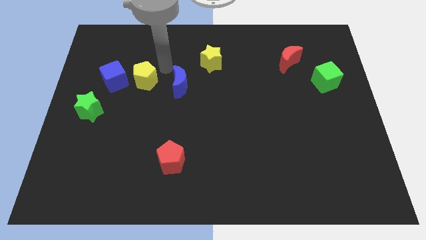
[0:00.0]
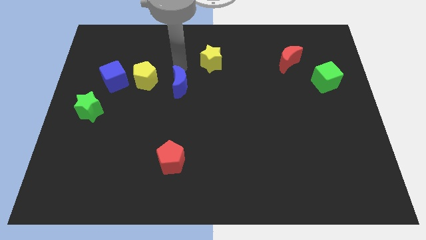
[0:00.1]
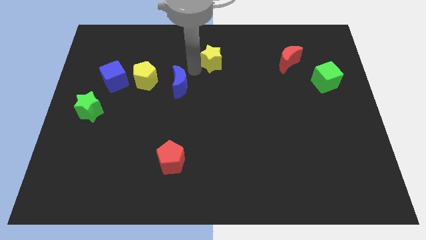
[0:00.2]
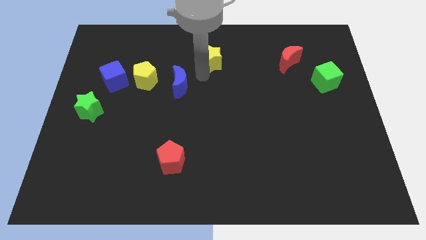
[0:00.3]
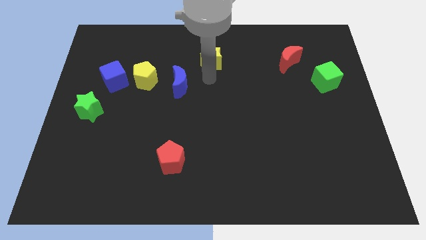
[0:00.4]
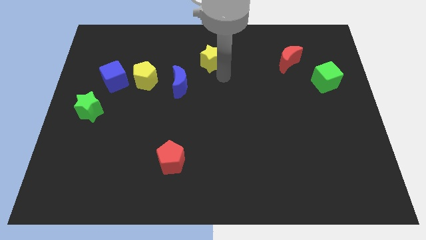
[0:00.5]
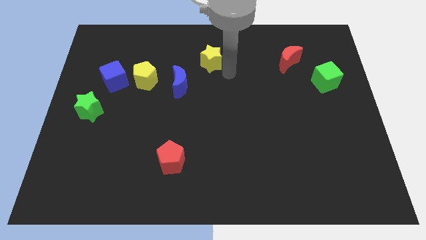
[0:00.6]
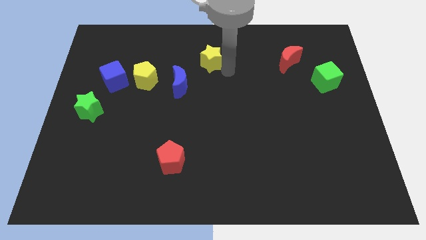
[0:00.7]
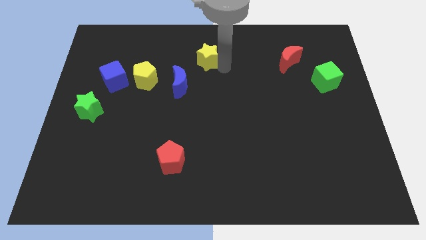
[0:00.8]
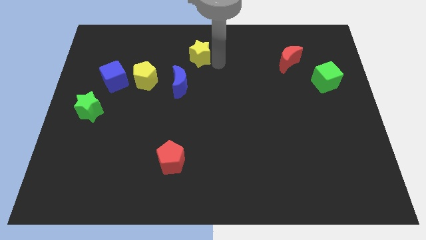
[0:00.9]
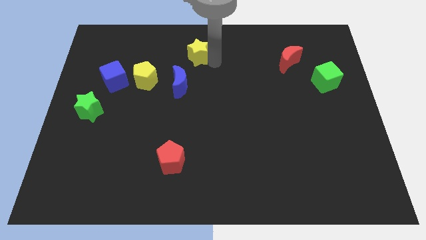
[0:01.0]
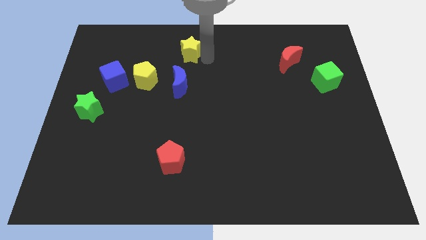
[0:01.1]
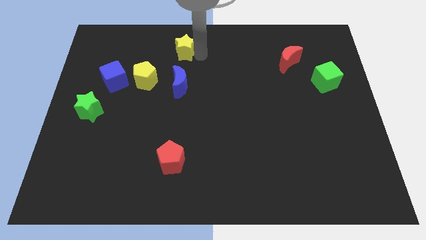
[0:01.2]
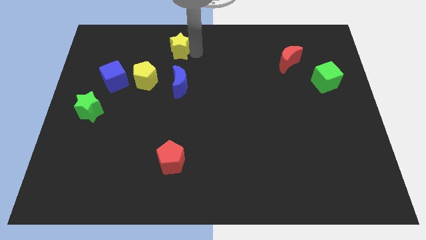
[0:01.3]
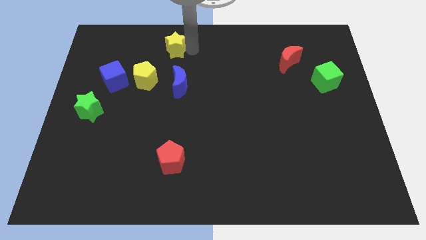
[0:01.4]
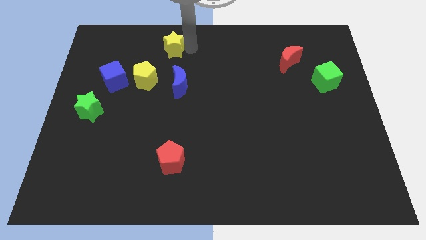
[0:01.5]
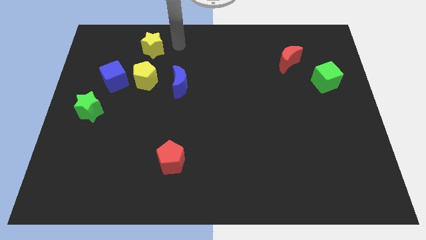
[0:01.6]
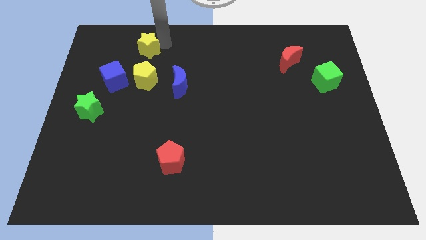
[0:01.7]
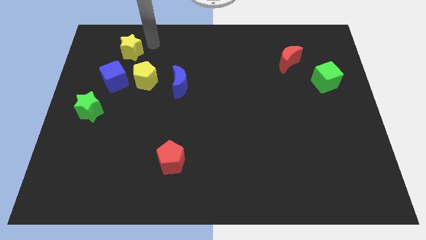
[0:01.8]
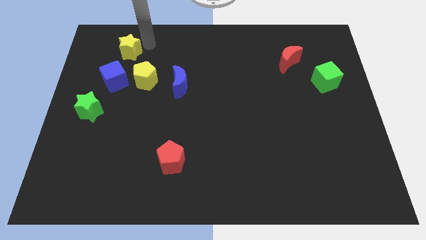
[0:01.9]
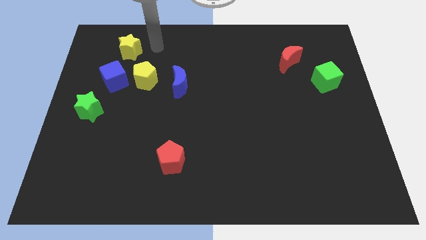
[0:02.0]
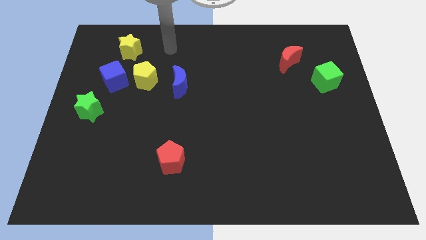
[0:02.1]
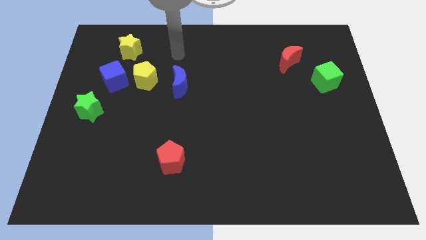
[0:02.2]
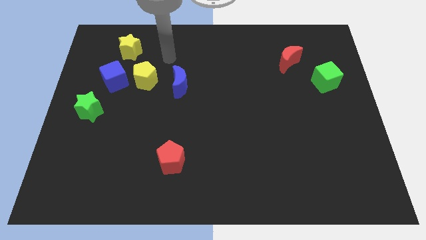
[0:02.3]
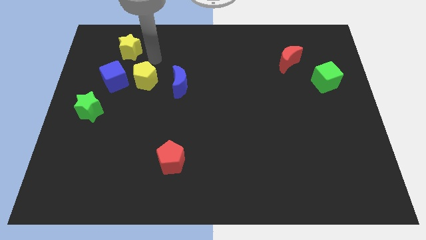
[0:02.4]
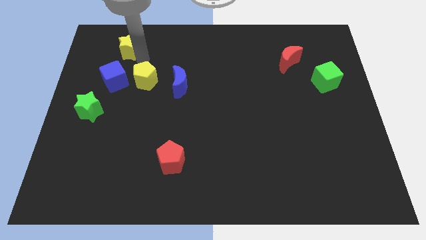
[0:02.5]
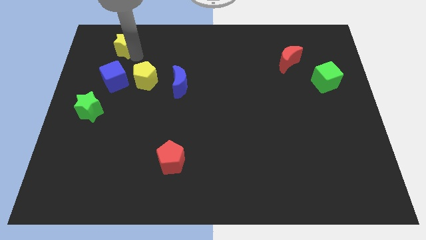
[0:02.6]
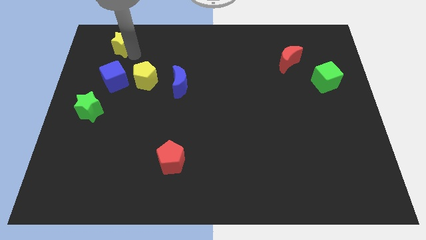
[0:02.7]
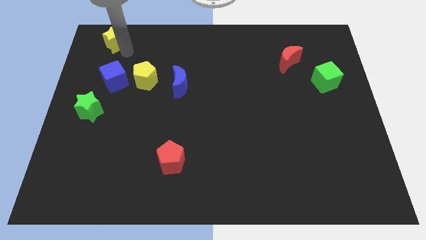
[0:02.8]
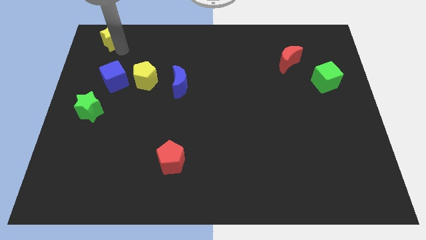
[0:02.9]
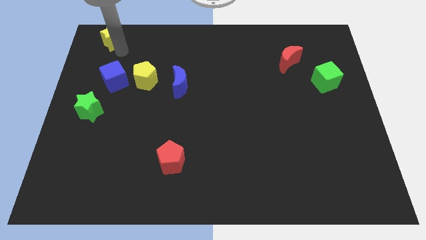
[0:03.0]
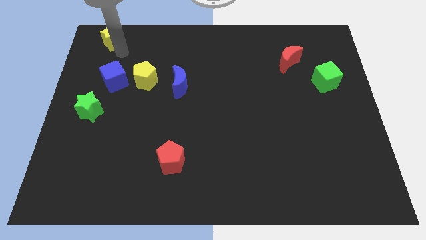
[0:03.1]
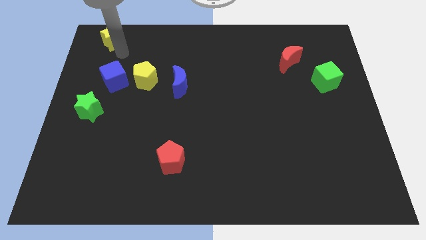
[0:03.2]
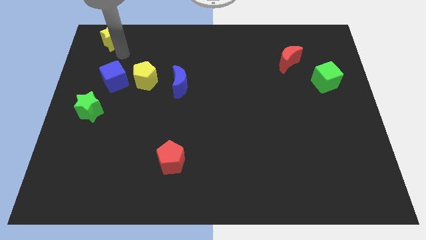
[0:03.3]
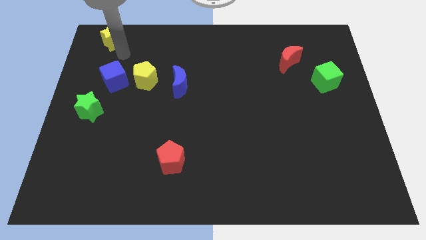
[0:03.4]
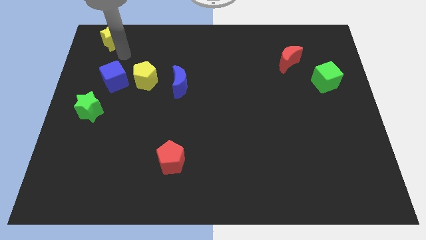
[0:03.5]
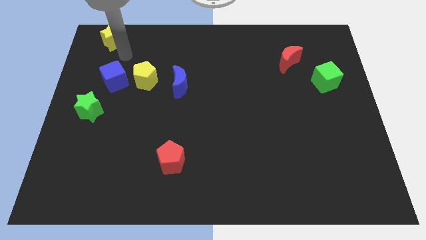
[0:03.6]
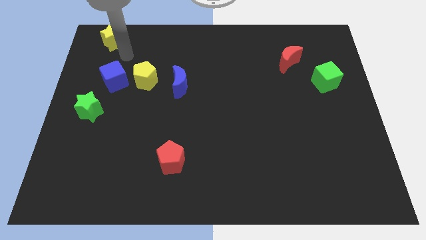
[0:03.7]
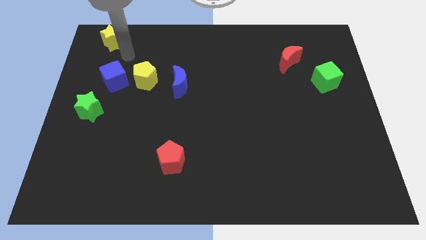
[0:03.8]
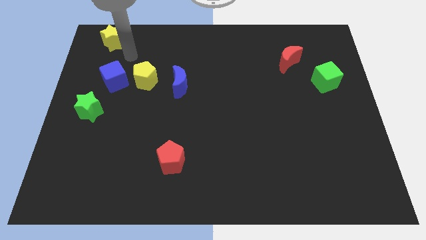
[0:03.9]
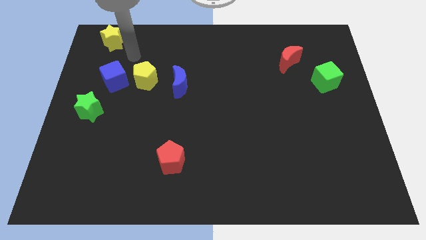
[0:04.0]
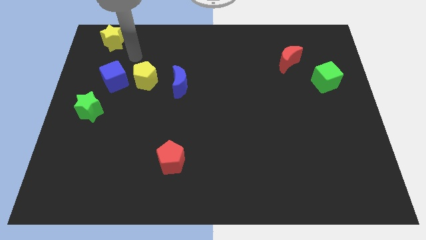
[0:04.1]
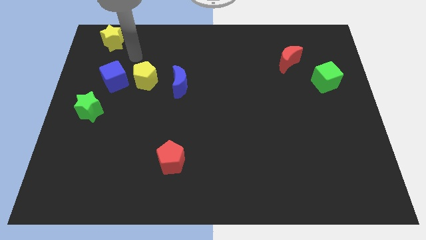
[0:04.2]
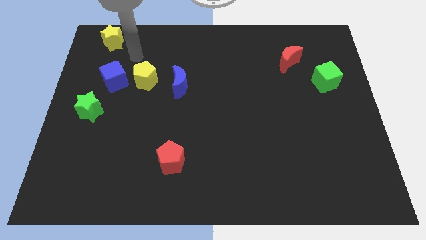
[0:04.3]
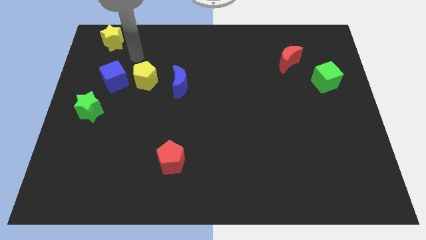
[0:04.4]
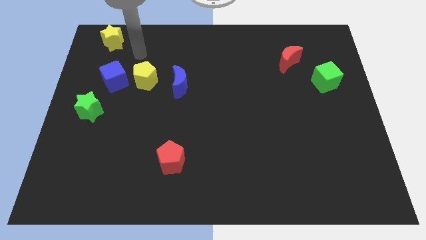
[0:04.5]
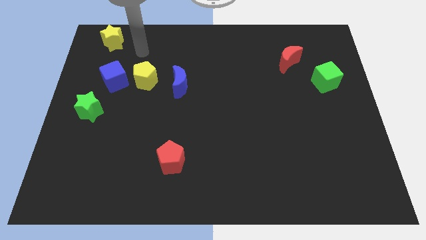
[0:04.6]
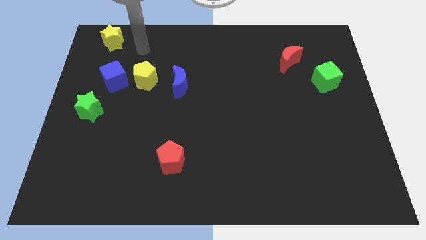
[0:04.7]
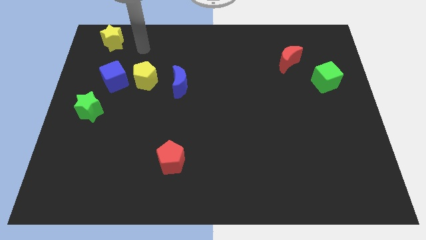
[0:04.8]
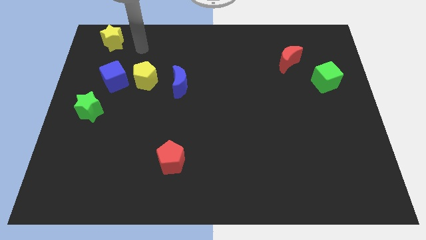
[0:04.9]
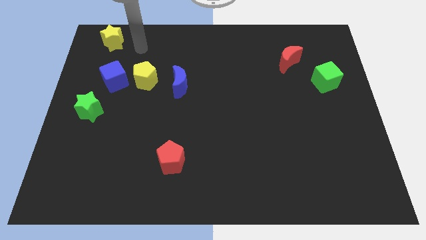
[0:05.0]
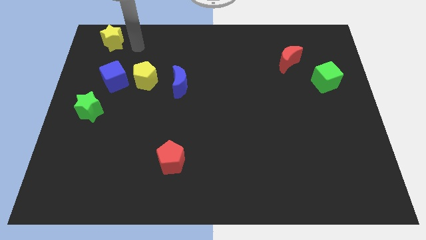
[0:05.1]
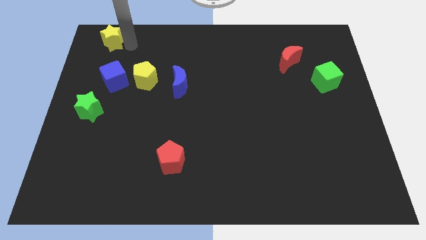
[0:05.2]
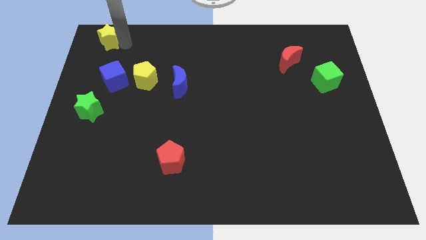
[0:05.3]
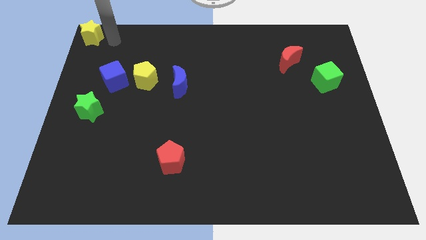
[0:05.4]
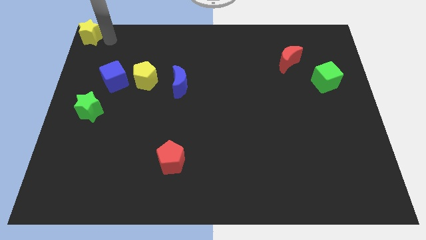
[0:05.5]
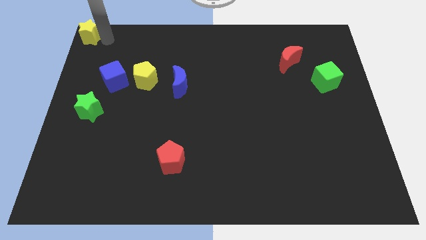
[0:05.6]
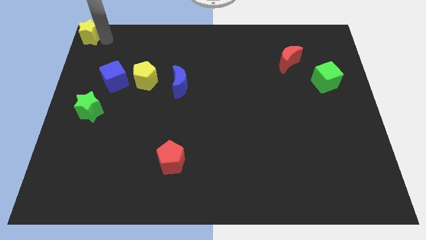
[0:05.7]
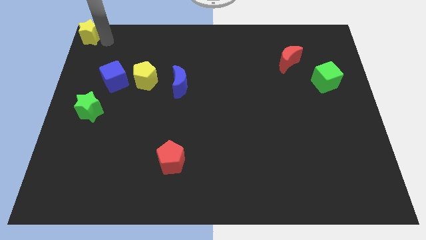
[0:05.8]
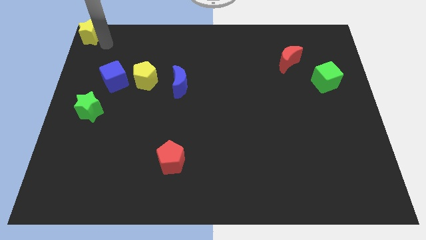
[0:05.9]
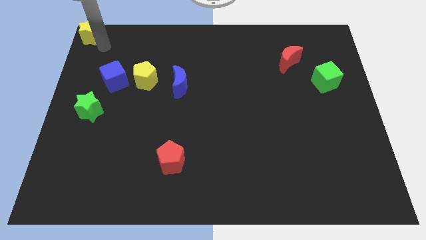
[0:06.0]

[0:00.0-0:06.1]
slide yellow star to the top left

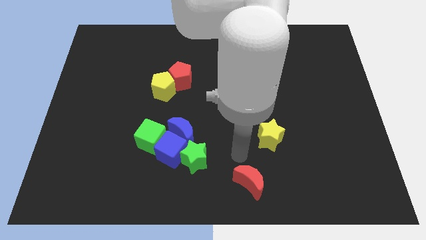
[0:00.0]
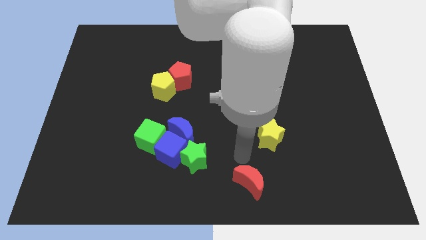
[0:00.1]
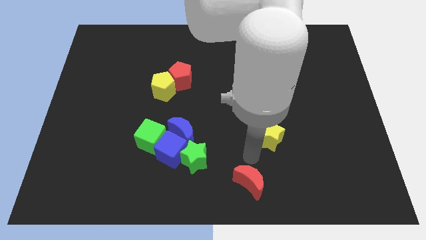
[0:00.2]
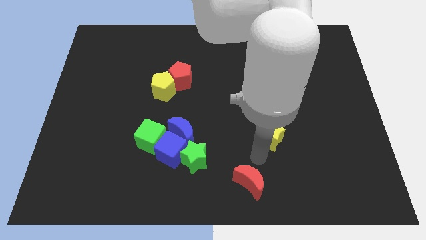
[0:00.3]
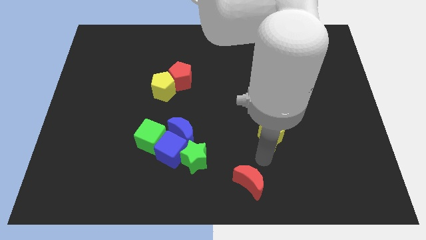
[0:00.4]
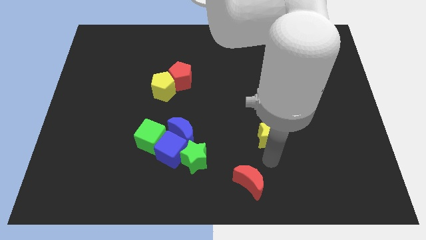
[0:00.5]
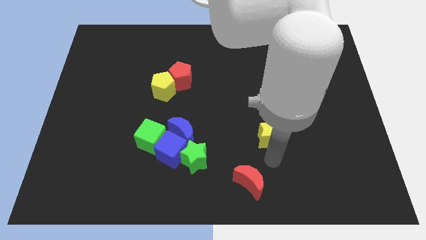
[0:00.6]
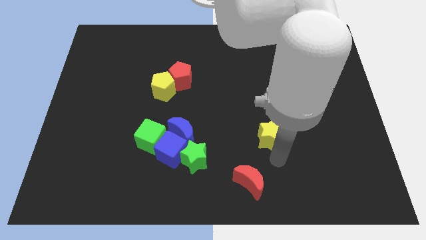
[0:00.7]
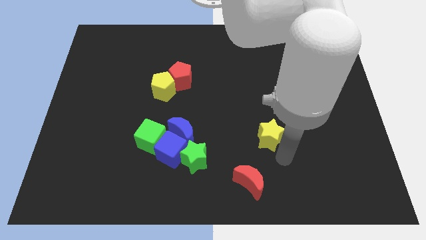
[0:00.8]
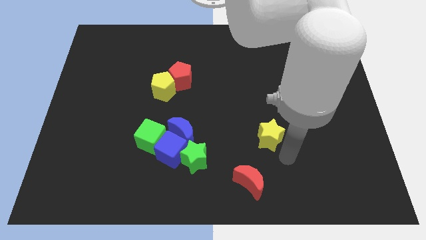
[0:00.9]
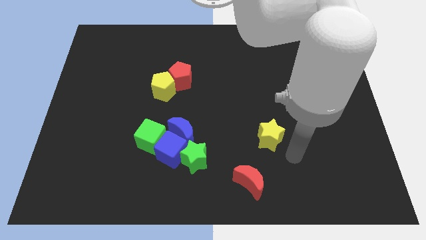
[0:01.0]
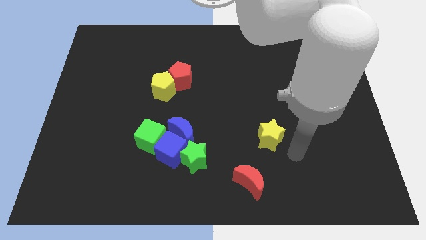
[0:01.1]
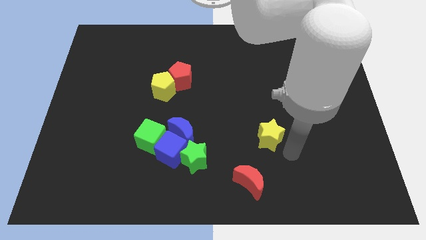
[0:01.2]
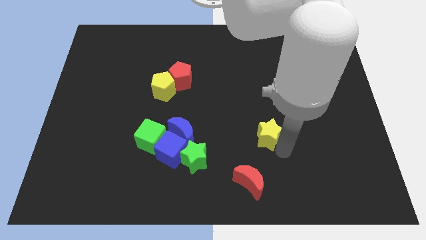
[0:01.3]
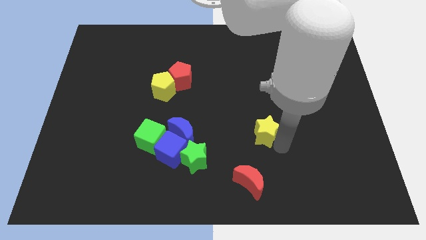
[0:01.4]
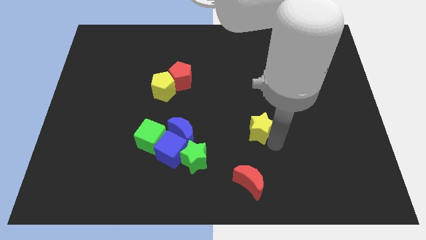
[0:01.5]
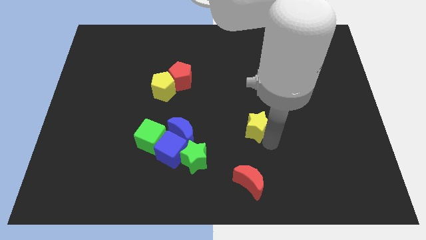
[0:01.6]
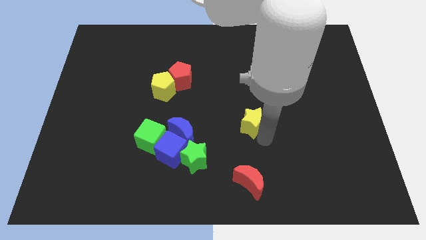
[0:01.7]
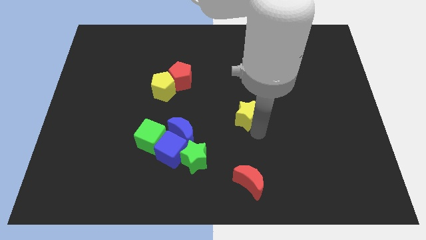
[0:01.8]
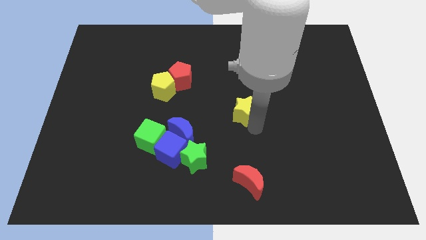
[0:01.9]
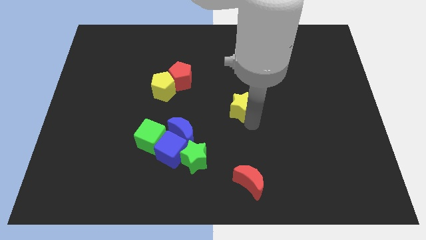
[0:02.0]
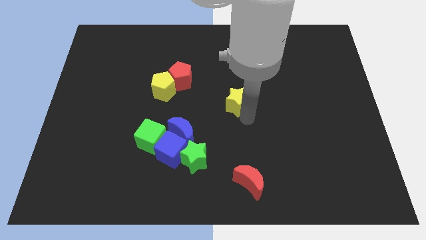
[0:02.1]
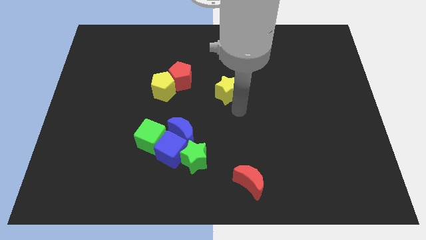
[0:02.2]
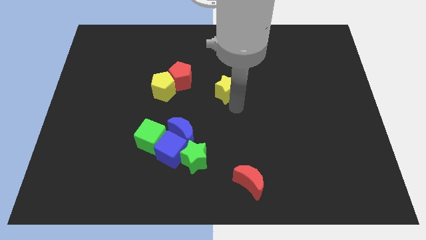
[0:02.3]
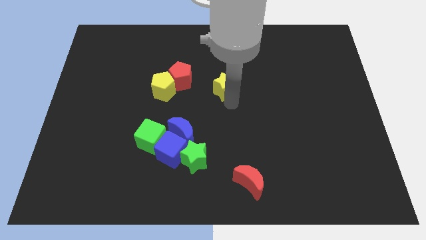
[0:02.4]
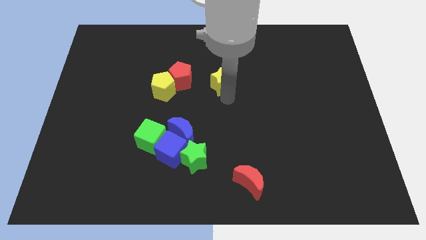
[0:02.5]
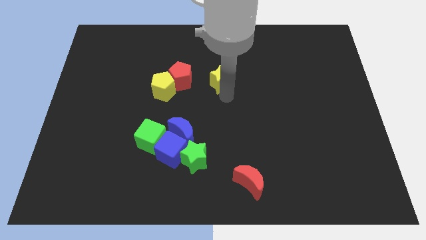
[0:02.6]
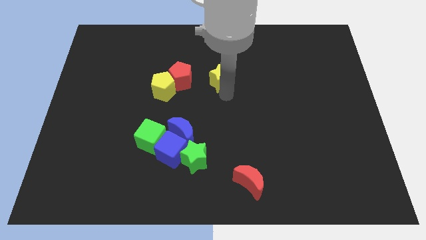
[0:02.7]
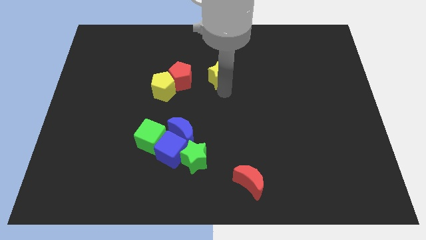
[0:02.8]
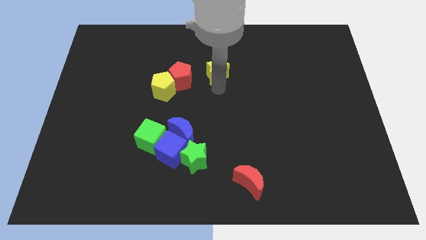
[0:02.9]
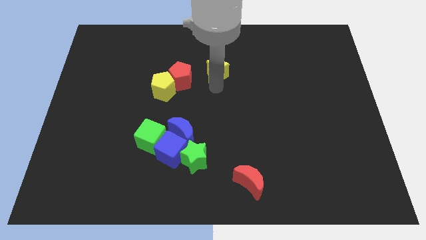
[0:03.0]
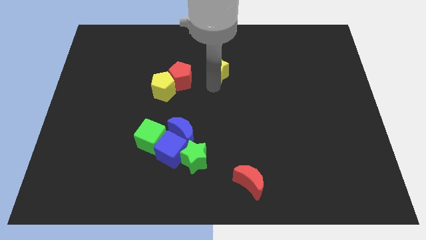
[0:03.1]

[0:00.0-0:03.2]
drag the yellow star slightly upwards
